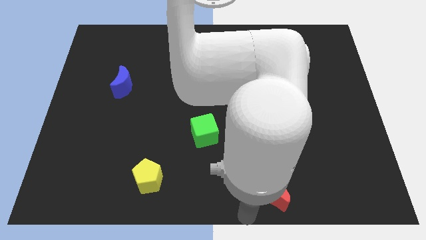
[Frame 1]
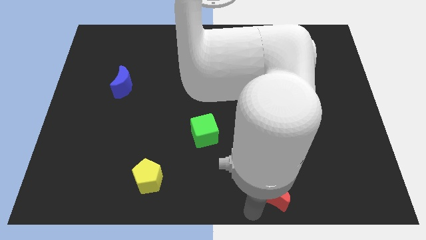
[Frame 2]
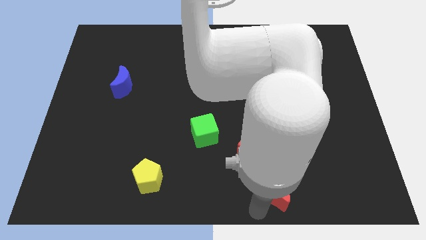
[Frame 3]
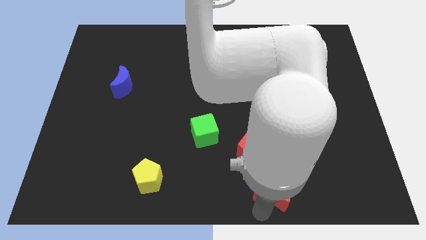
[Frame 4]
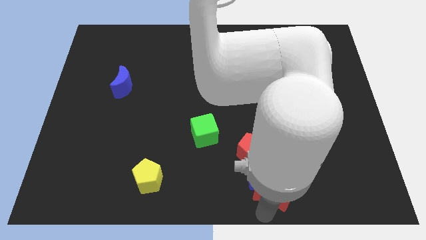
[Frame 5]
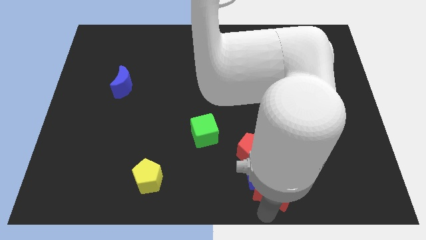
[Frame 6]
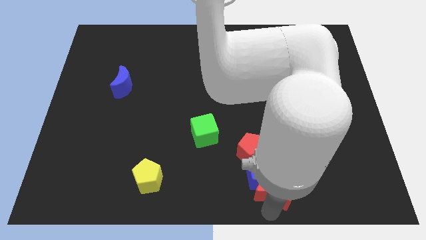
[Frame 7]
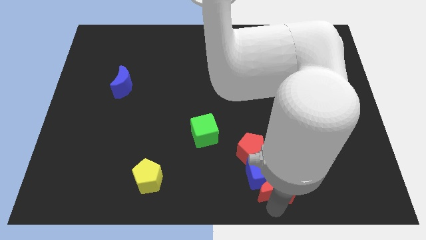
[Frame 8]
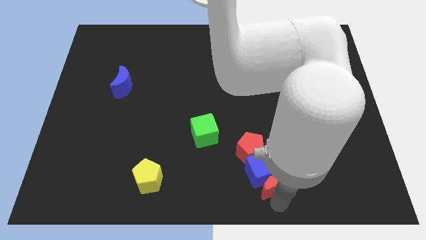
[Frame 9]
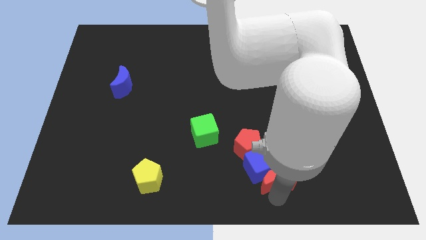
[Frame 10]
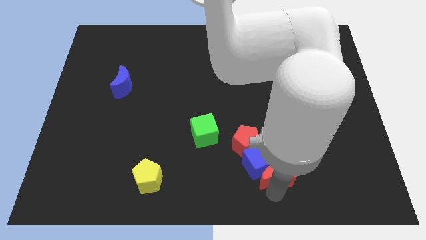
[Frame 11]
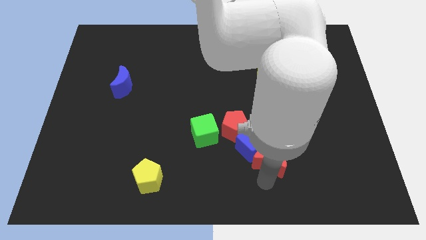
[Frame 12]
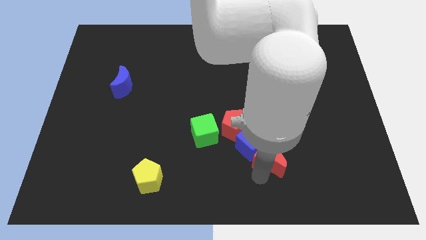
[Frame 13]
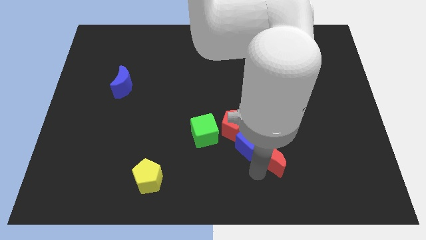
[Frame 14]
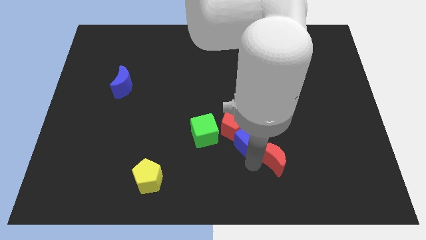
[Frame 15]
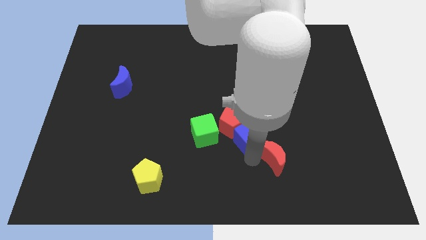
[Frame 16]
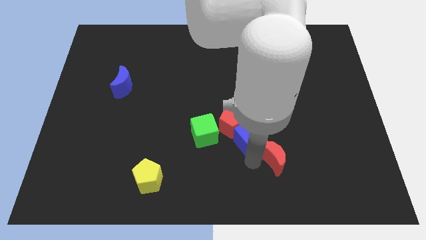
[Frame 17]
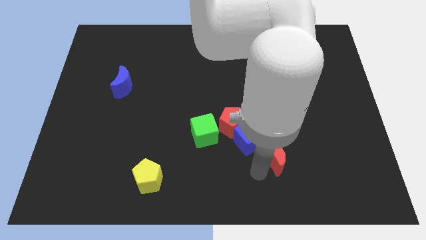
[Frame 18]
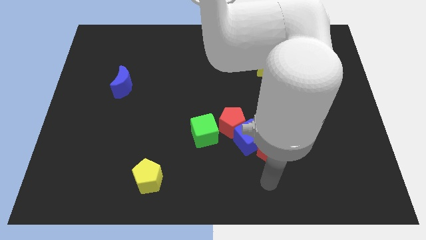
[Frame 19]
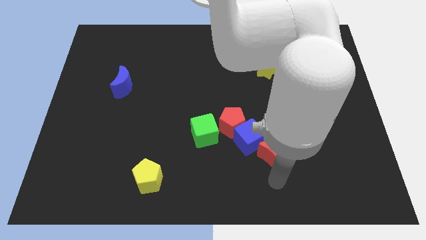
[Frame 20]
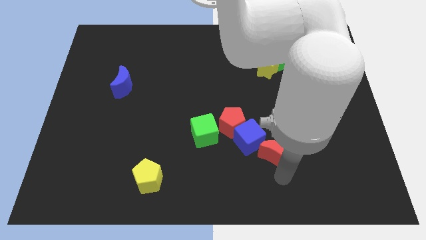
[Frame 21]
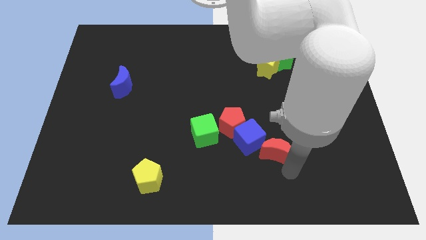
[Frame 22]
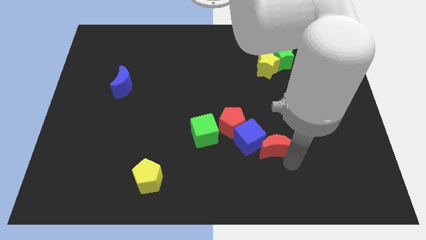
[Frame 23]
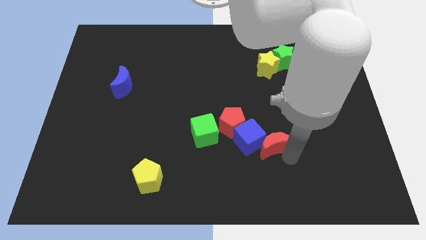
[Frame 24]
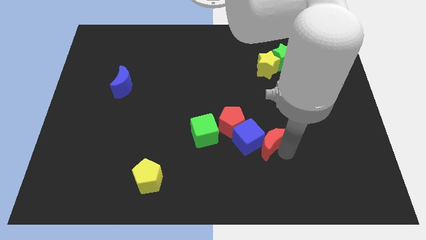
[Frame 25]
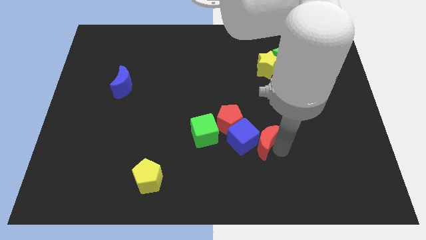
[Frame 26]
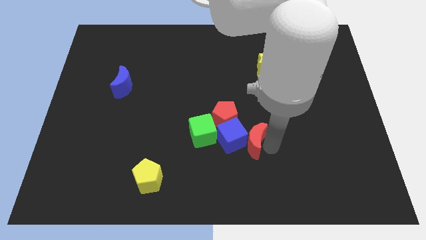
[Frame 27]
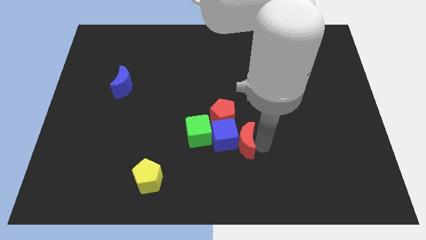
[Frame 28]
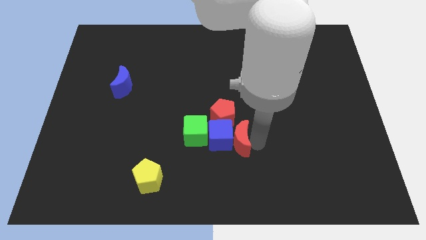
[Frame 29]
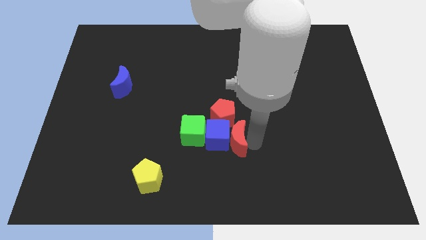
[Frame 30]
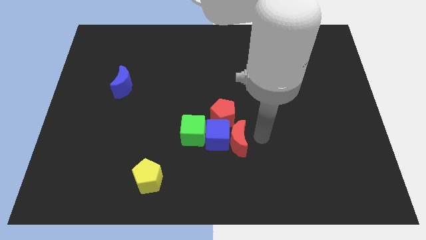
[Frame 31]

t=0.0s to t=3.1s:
push the red blocks and blue cube towards green cube

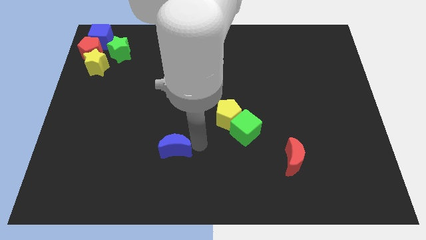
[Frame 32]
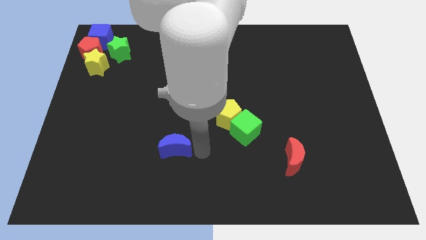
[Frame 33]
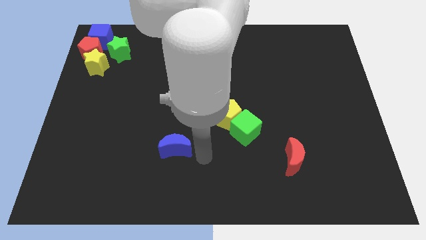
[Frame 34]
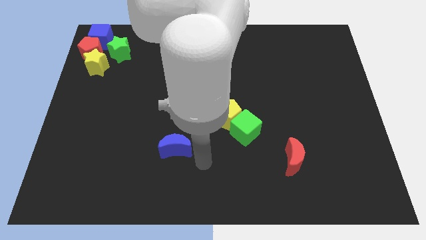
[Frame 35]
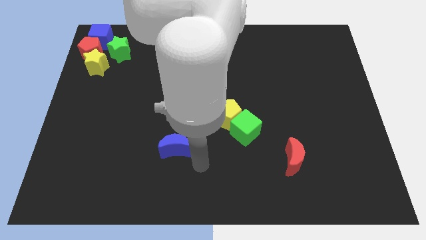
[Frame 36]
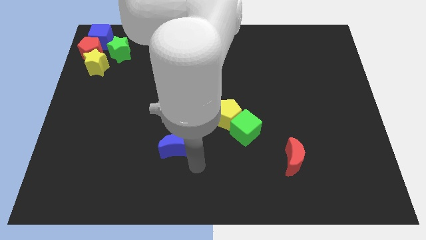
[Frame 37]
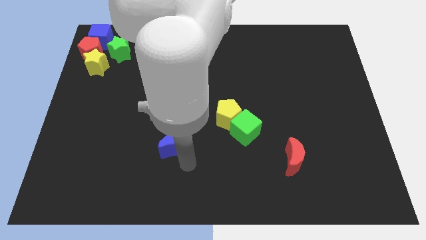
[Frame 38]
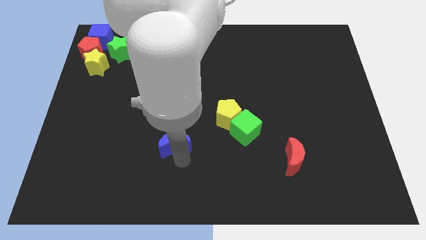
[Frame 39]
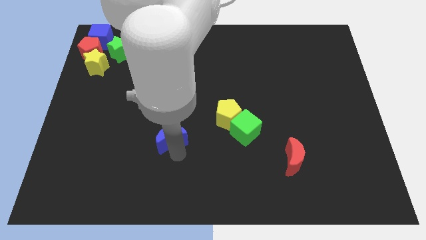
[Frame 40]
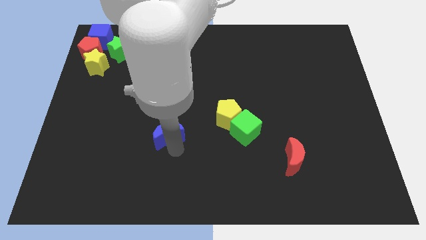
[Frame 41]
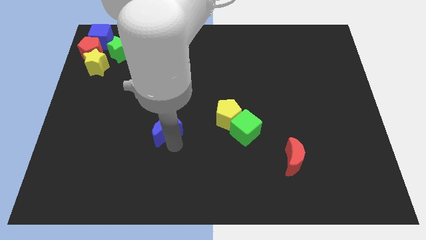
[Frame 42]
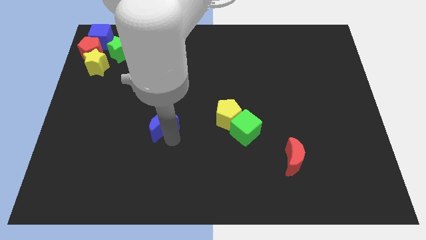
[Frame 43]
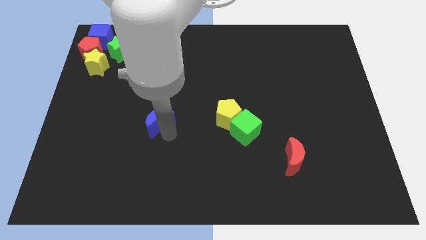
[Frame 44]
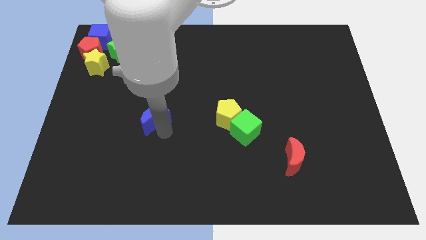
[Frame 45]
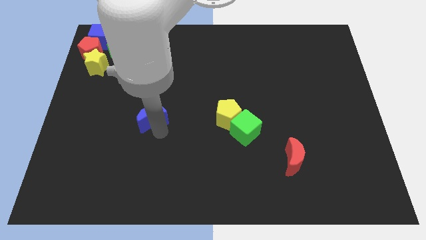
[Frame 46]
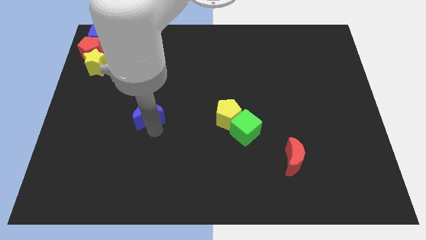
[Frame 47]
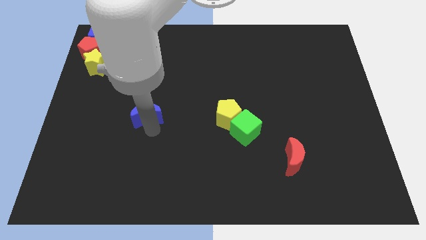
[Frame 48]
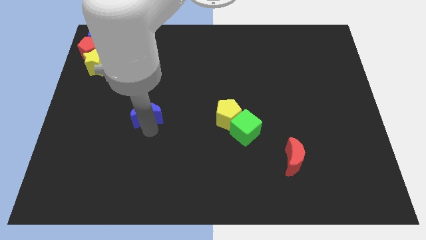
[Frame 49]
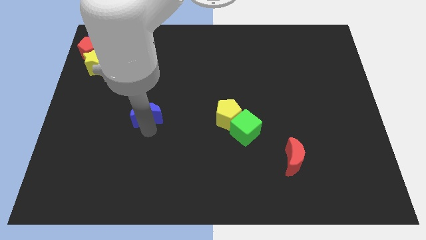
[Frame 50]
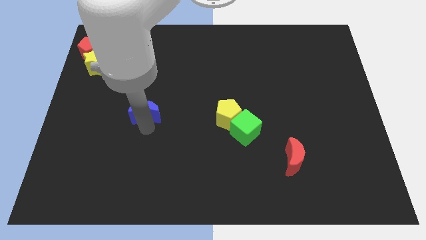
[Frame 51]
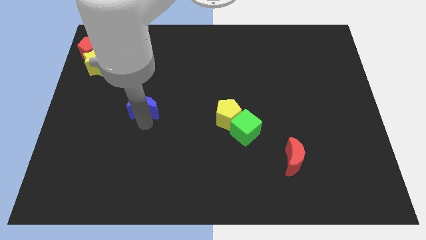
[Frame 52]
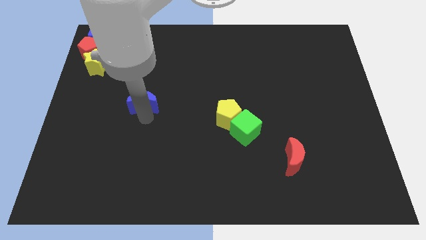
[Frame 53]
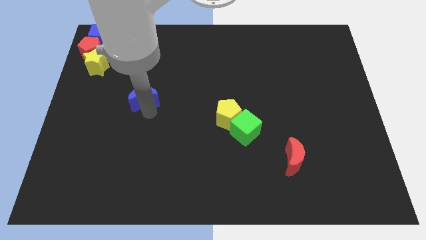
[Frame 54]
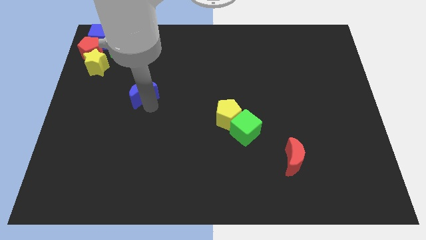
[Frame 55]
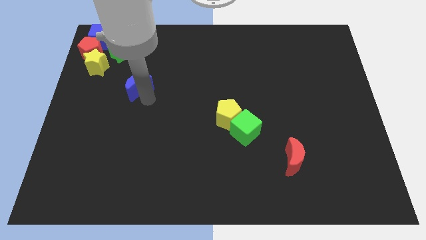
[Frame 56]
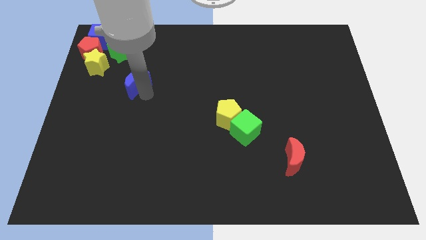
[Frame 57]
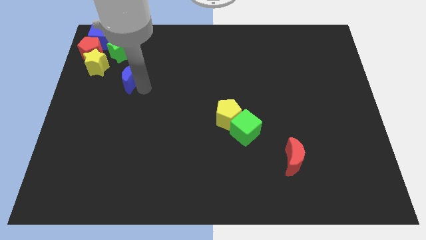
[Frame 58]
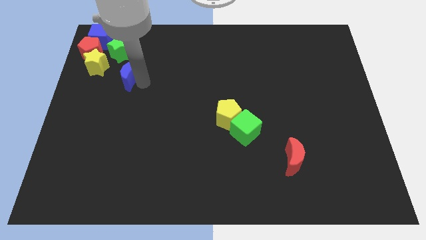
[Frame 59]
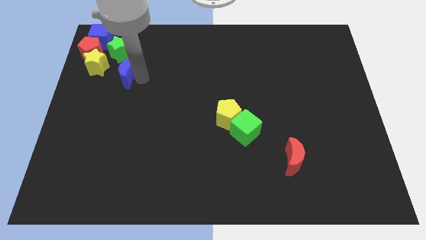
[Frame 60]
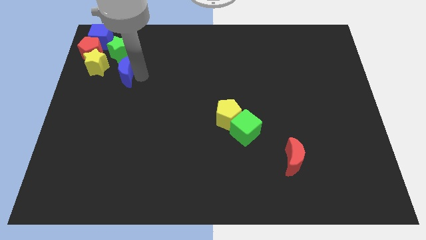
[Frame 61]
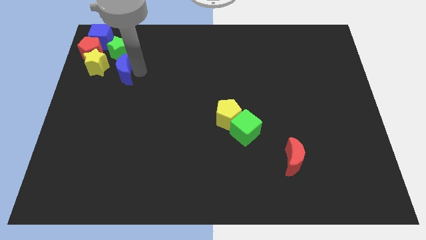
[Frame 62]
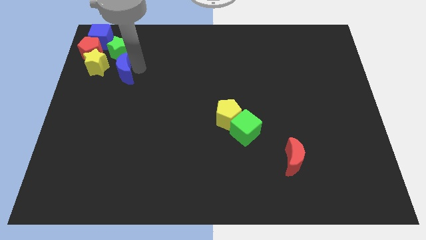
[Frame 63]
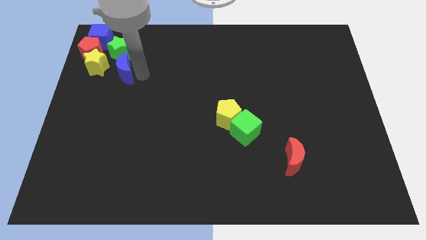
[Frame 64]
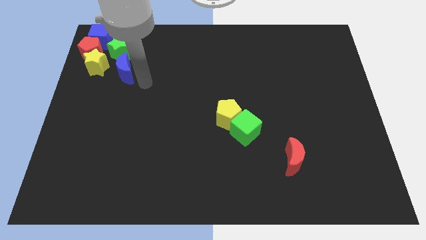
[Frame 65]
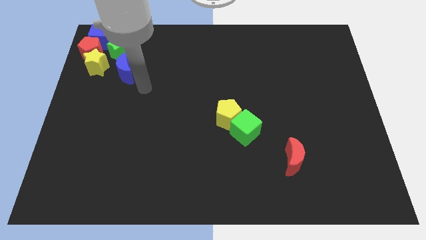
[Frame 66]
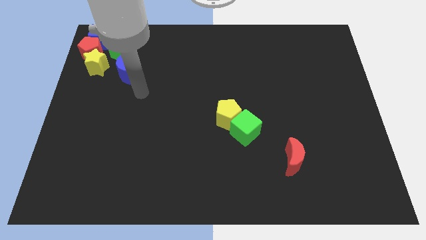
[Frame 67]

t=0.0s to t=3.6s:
move the blue moon bottom right to green star

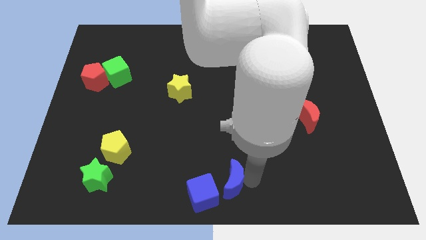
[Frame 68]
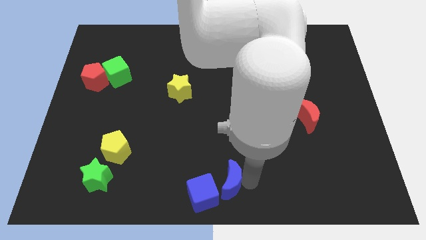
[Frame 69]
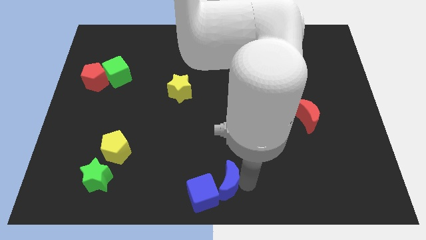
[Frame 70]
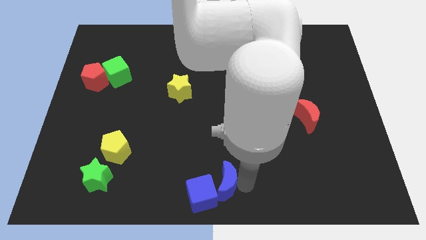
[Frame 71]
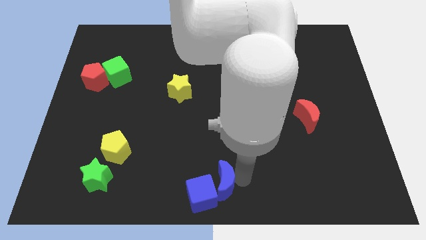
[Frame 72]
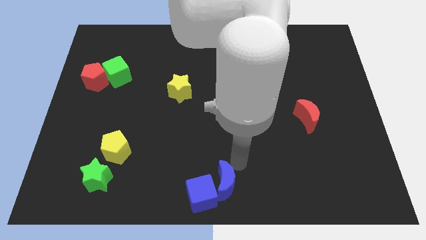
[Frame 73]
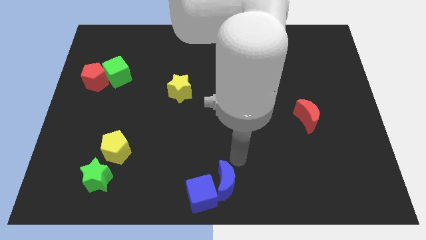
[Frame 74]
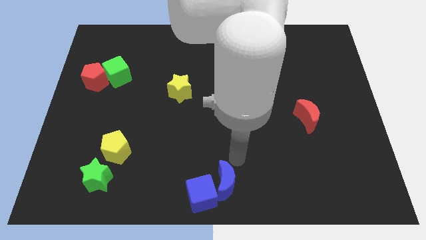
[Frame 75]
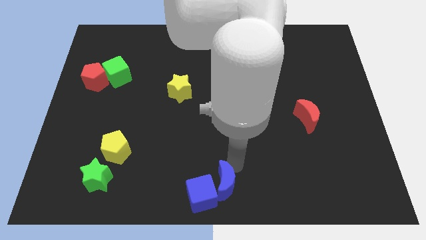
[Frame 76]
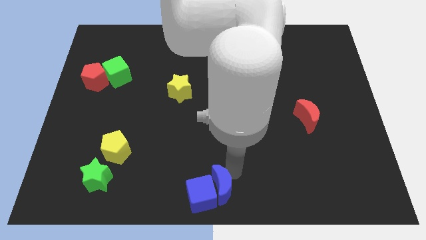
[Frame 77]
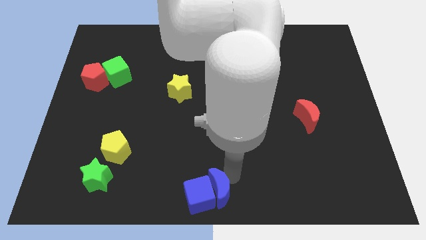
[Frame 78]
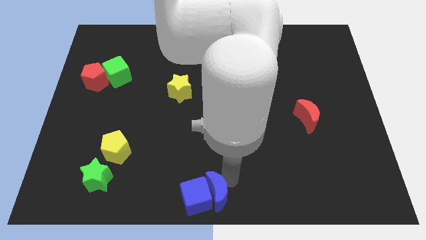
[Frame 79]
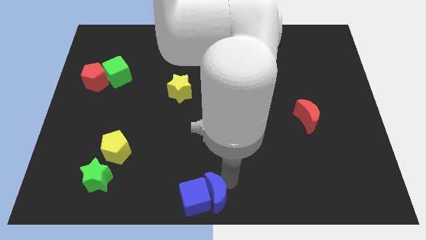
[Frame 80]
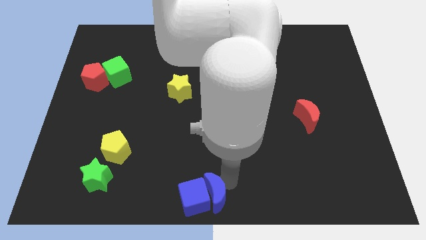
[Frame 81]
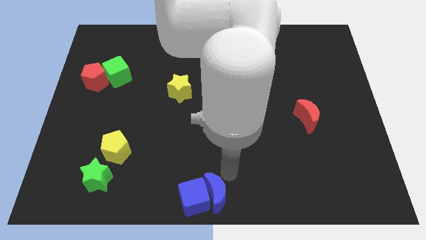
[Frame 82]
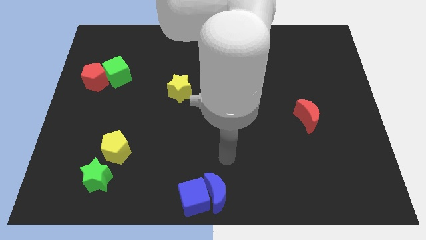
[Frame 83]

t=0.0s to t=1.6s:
move your arm away from blue moon

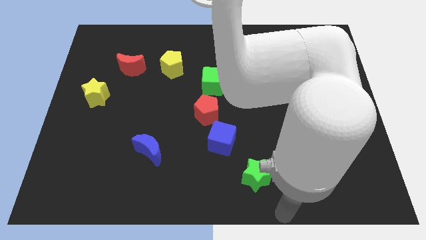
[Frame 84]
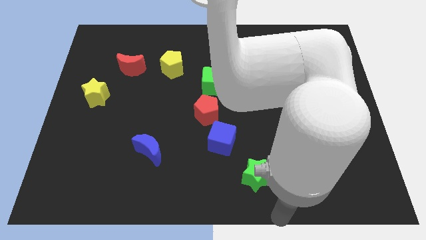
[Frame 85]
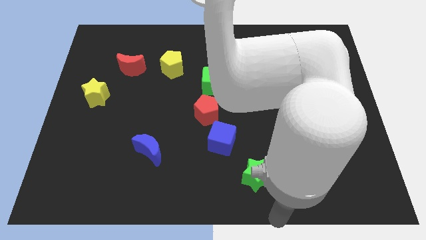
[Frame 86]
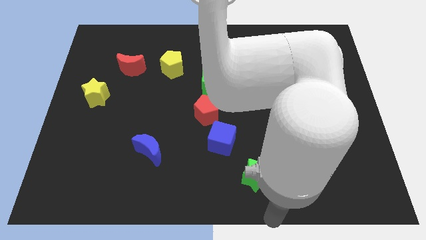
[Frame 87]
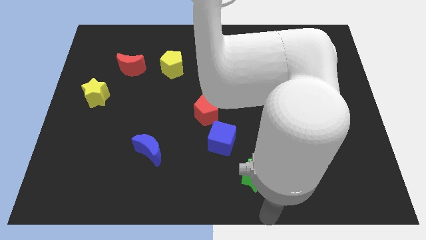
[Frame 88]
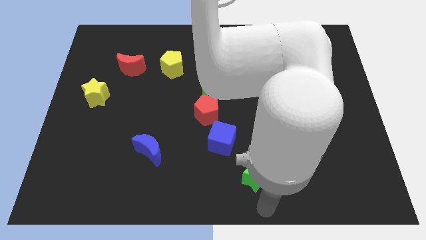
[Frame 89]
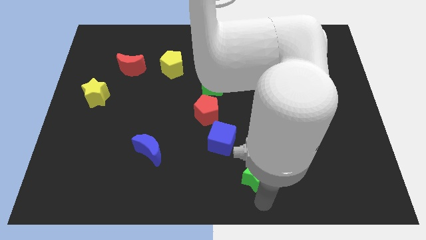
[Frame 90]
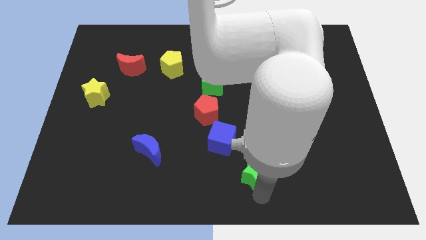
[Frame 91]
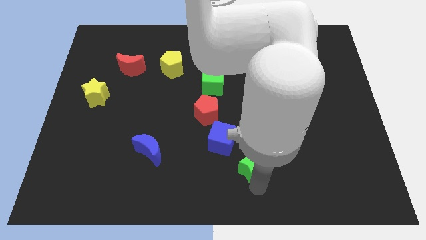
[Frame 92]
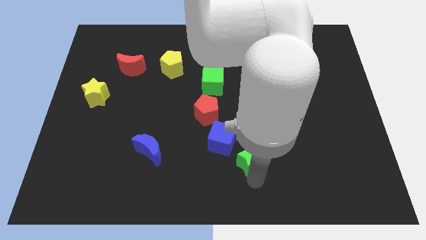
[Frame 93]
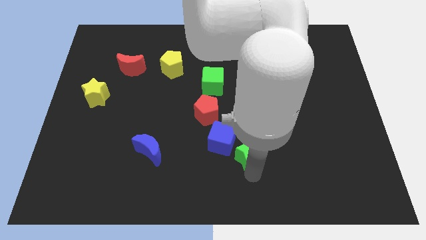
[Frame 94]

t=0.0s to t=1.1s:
push green star towards blue cube
